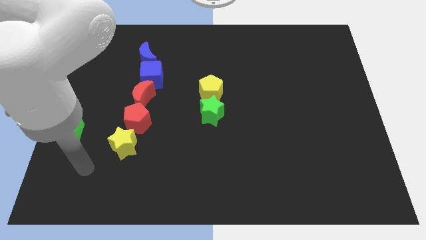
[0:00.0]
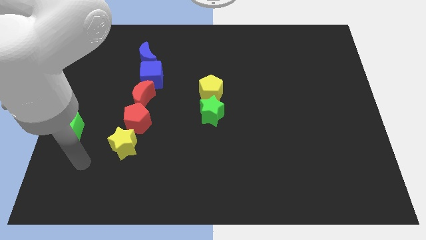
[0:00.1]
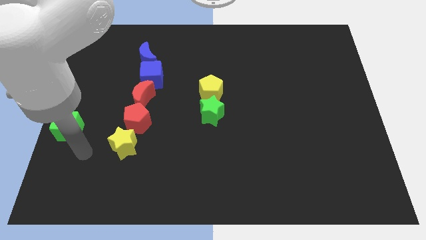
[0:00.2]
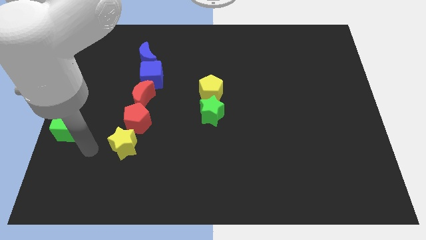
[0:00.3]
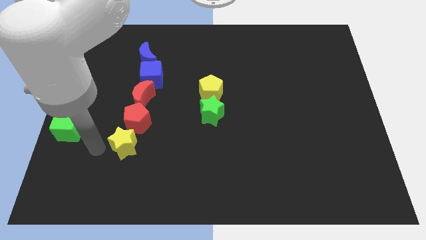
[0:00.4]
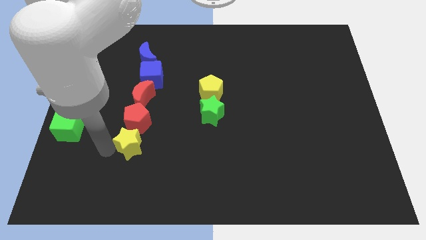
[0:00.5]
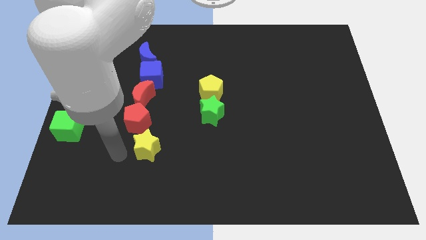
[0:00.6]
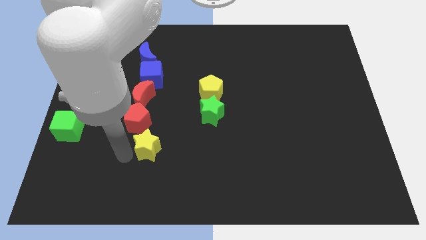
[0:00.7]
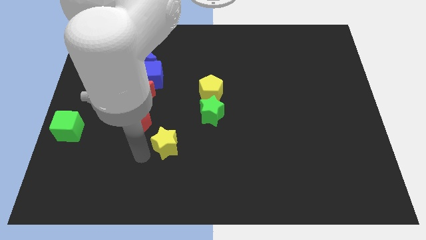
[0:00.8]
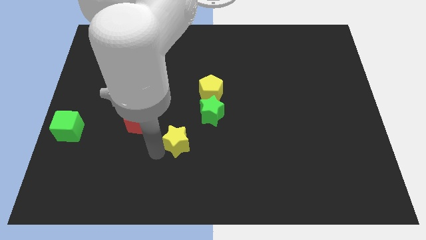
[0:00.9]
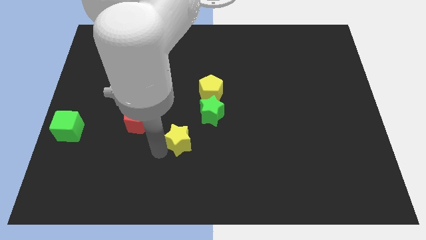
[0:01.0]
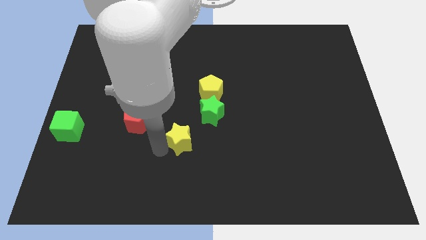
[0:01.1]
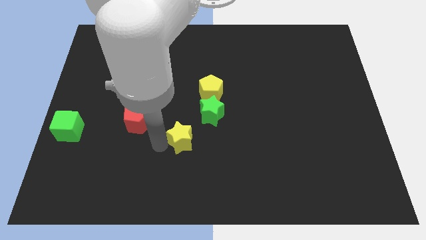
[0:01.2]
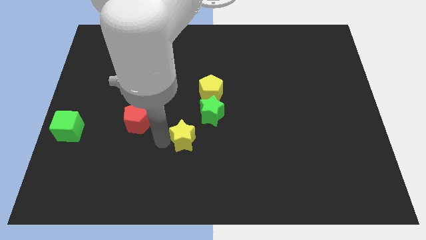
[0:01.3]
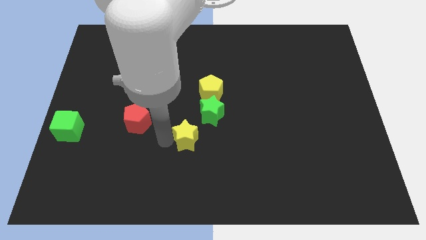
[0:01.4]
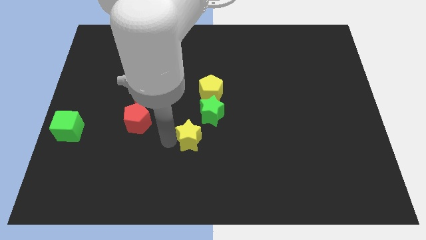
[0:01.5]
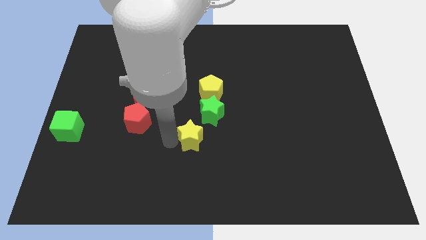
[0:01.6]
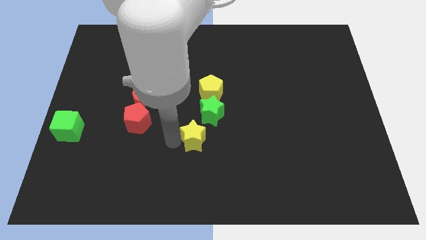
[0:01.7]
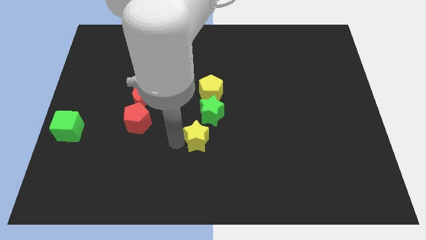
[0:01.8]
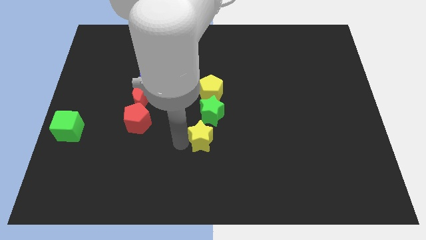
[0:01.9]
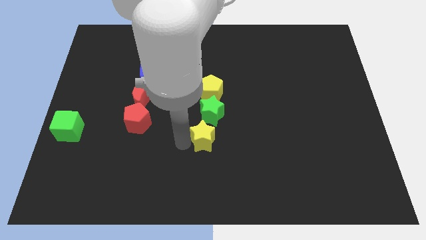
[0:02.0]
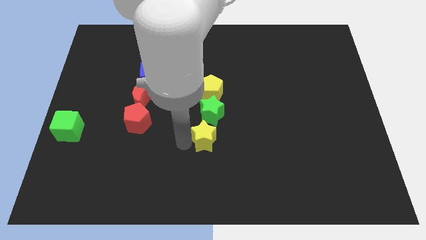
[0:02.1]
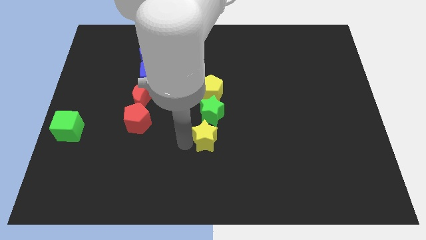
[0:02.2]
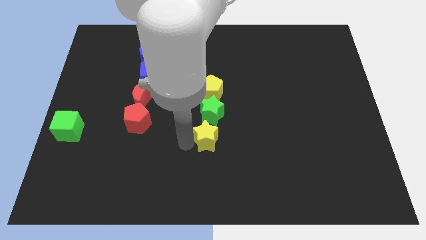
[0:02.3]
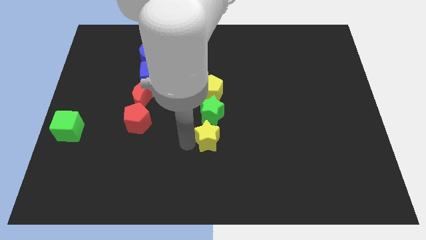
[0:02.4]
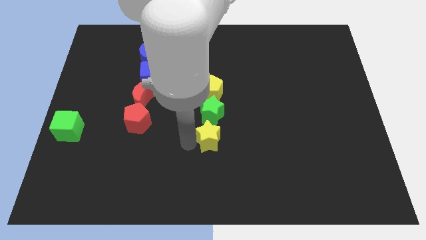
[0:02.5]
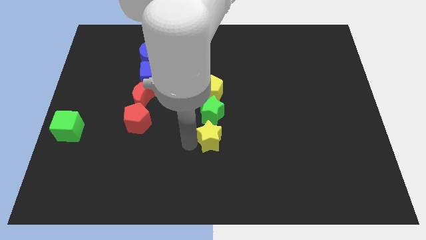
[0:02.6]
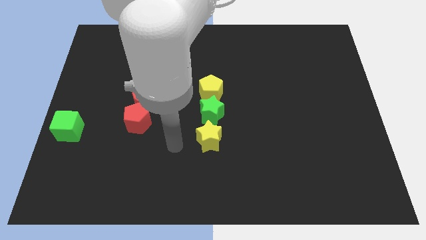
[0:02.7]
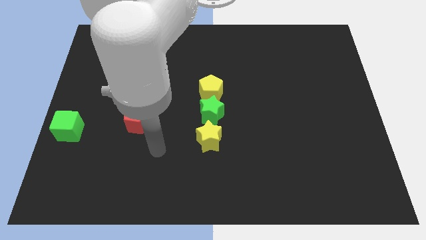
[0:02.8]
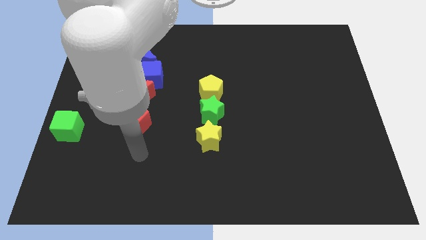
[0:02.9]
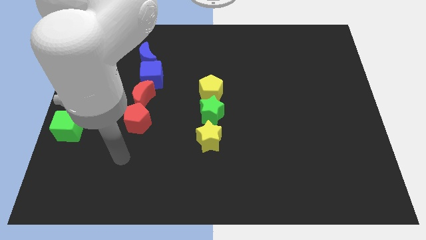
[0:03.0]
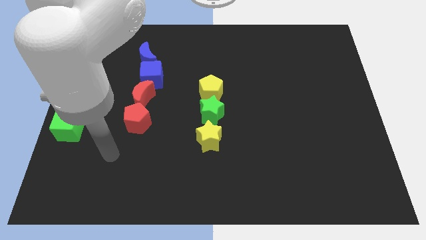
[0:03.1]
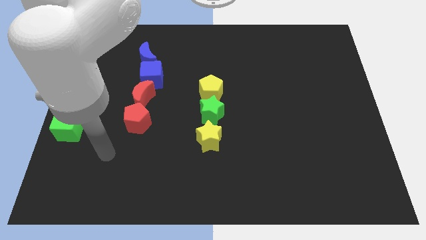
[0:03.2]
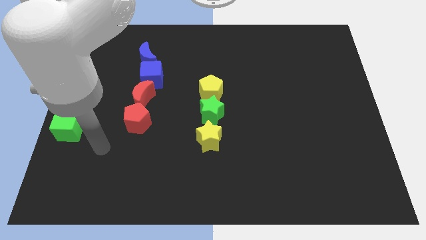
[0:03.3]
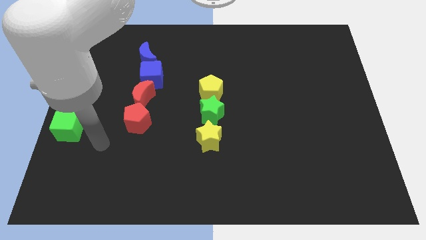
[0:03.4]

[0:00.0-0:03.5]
push the yellow star below the green star

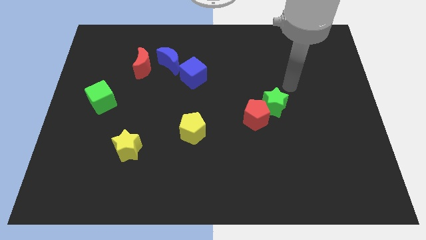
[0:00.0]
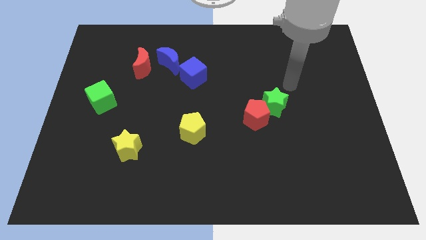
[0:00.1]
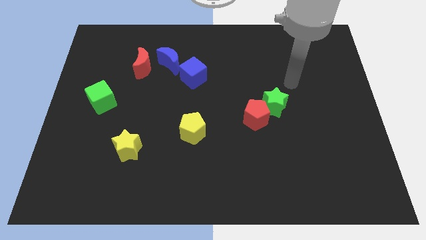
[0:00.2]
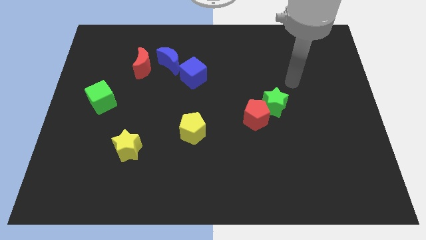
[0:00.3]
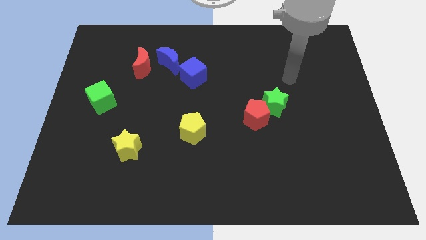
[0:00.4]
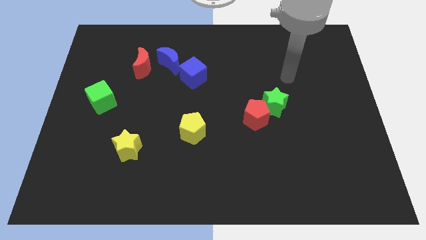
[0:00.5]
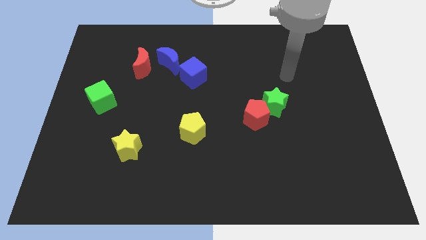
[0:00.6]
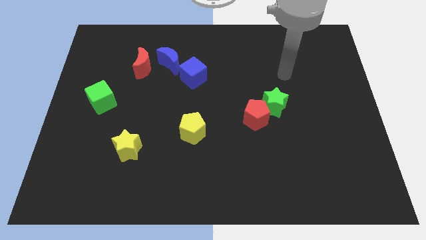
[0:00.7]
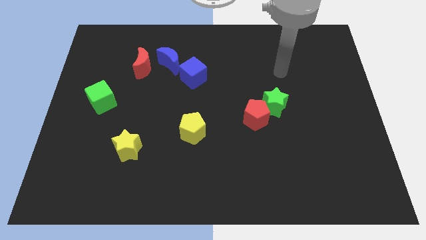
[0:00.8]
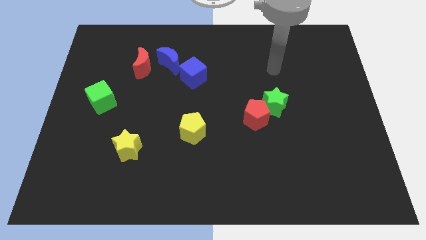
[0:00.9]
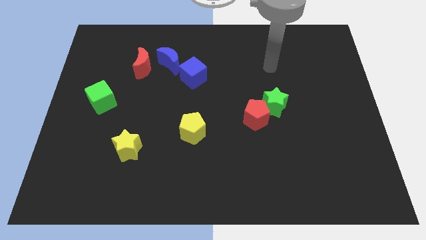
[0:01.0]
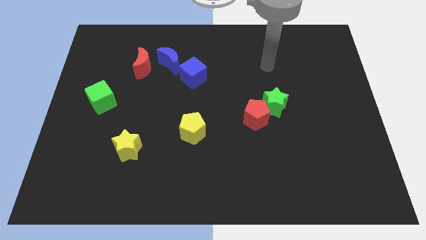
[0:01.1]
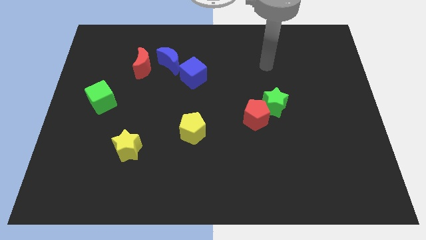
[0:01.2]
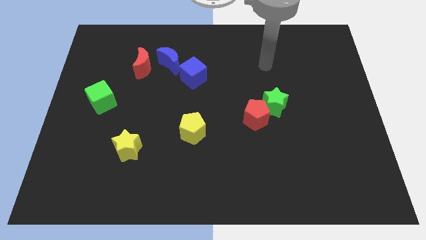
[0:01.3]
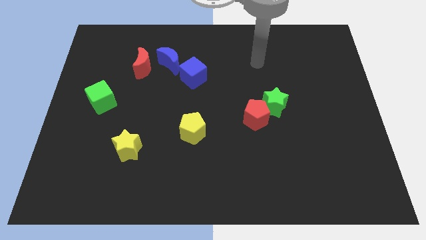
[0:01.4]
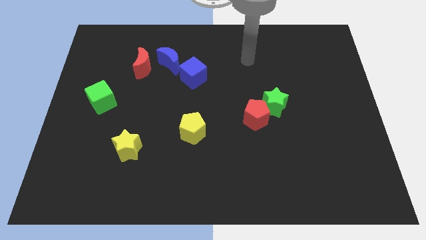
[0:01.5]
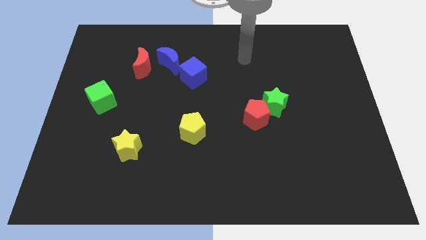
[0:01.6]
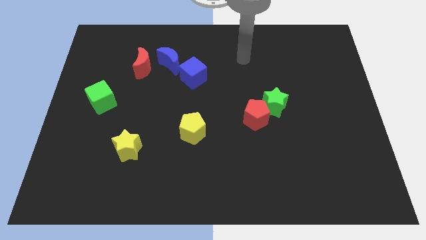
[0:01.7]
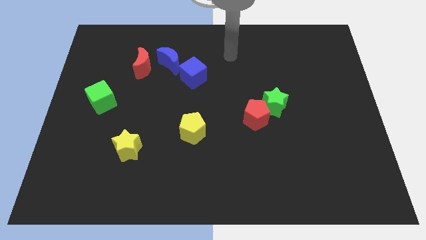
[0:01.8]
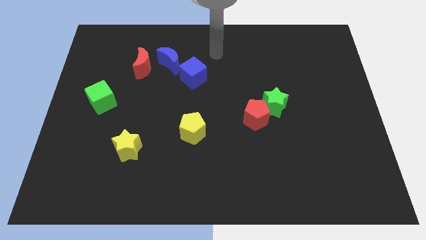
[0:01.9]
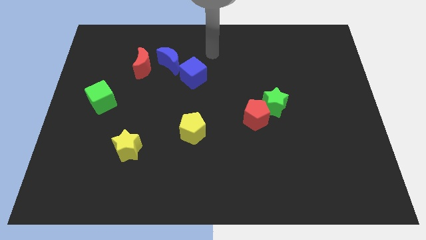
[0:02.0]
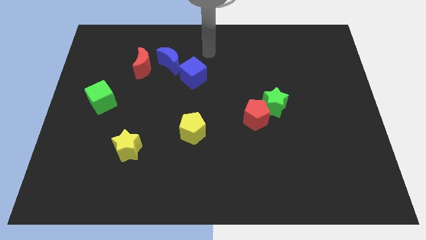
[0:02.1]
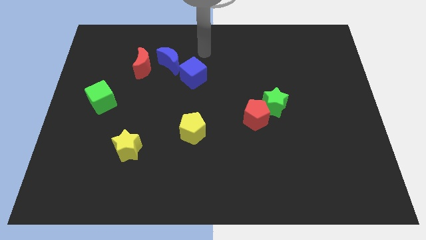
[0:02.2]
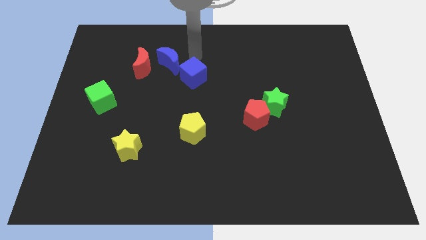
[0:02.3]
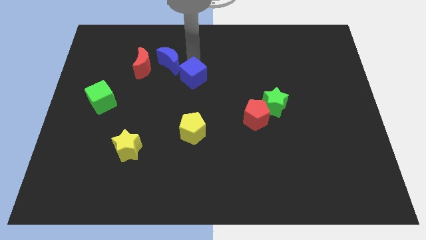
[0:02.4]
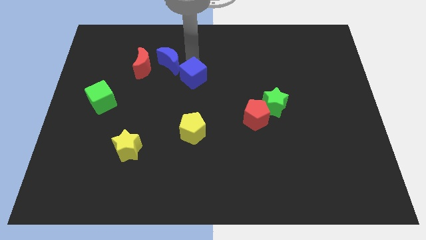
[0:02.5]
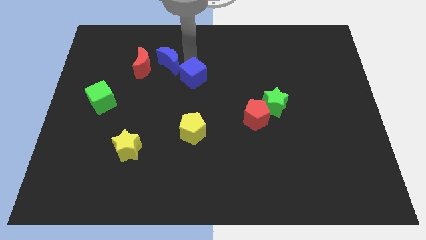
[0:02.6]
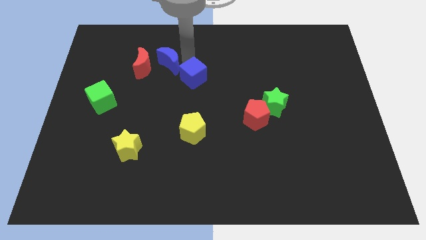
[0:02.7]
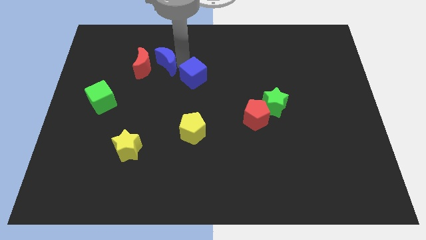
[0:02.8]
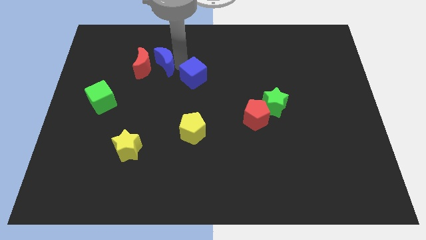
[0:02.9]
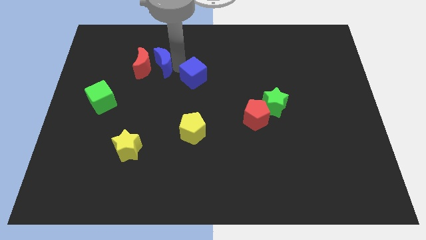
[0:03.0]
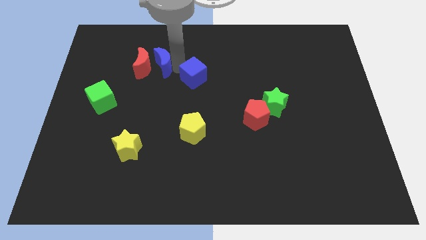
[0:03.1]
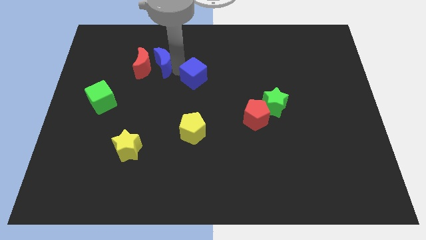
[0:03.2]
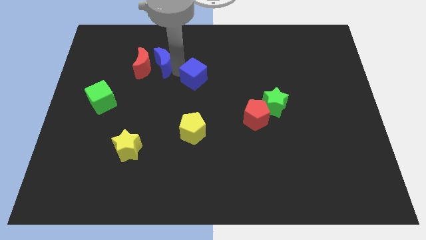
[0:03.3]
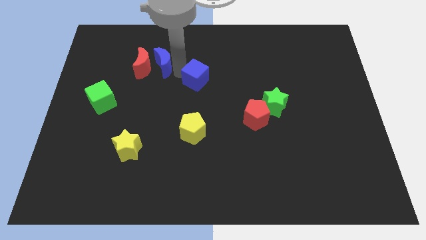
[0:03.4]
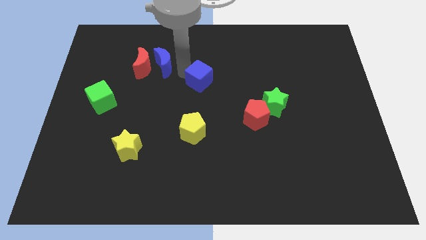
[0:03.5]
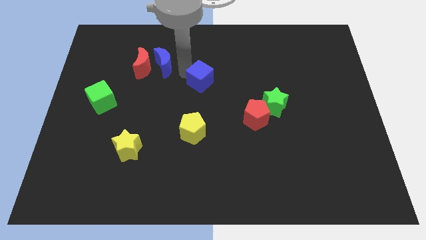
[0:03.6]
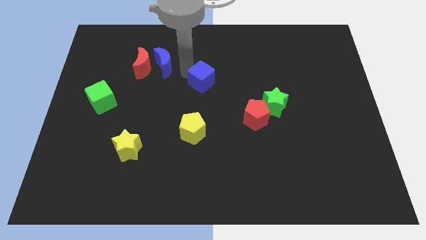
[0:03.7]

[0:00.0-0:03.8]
point your arm between blue moon and blue cube

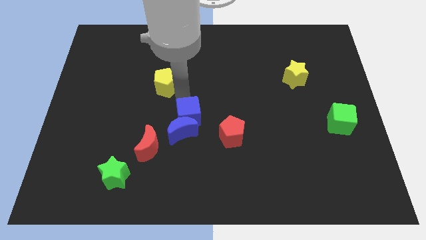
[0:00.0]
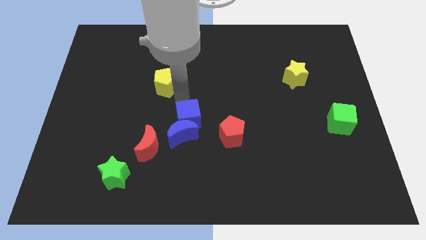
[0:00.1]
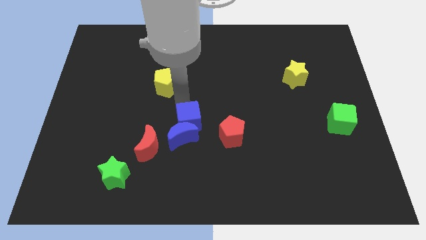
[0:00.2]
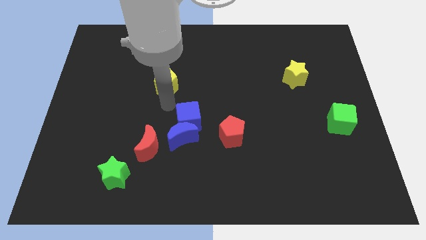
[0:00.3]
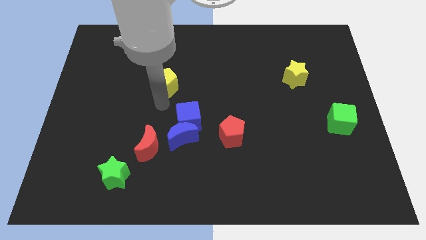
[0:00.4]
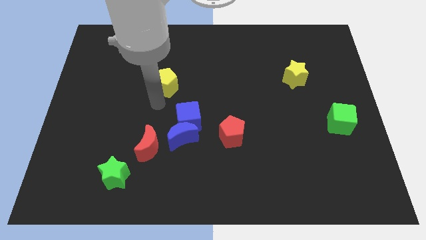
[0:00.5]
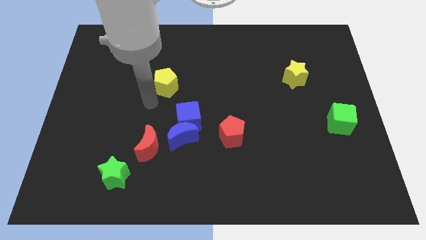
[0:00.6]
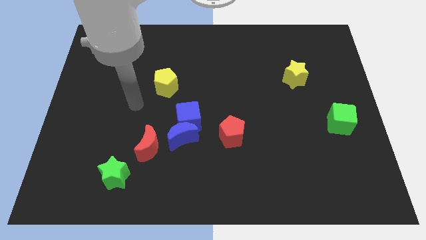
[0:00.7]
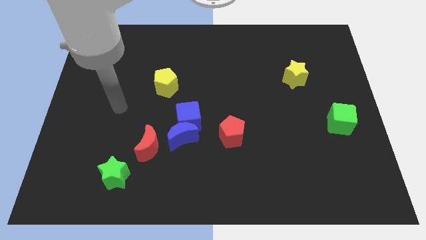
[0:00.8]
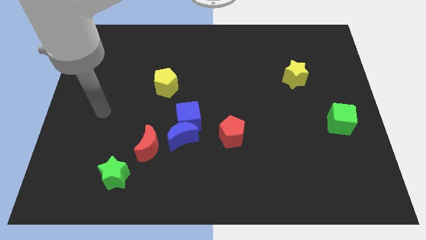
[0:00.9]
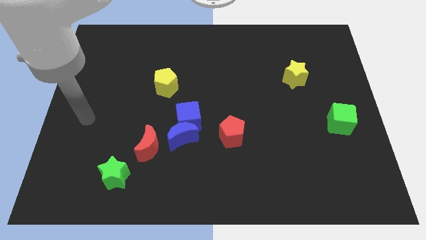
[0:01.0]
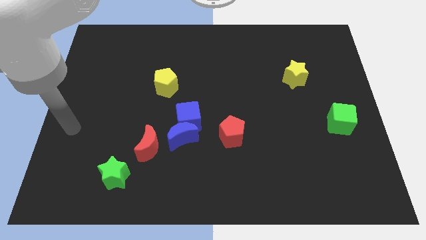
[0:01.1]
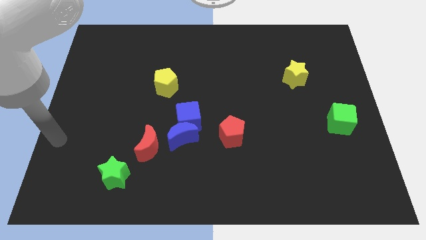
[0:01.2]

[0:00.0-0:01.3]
place blue moon between red moon and red pentagon

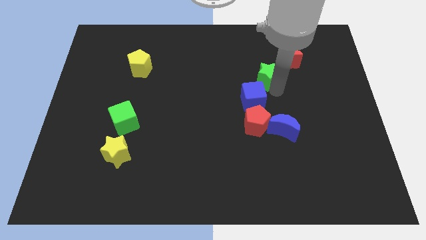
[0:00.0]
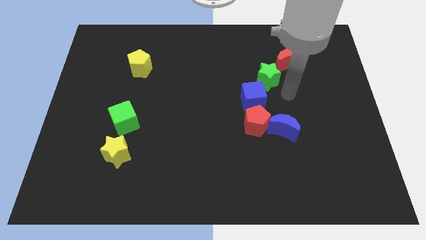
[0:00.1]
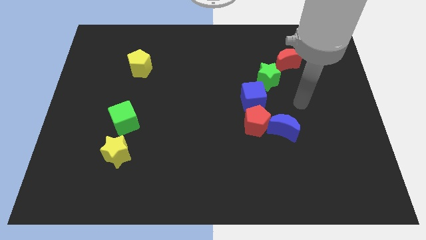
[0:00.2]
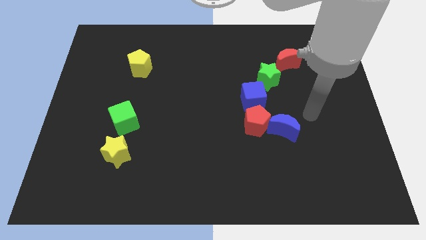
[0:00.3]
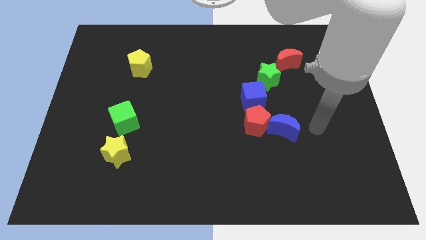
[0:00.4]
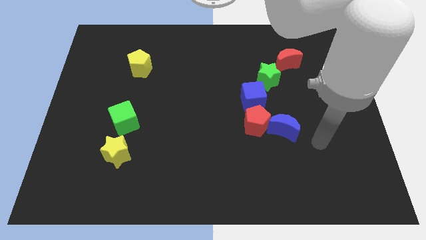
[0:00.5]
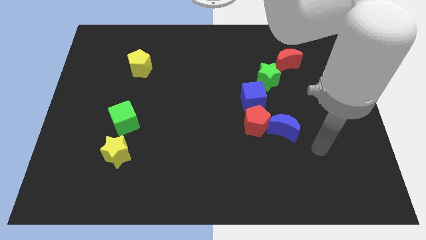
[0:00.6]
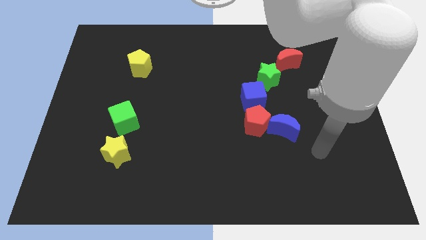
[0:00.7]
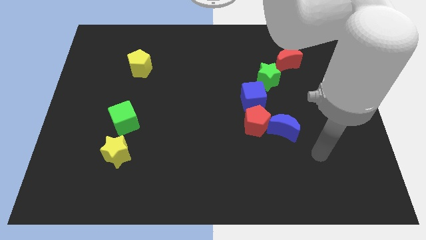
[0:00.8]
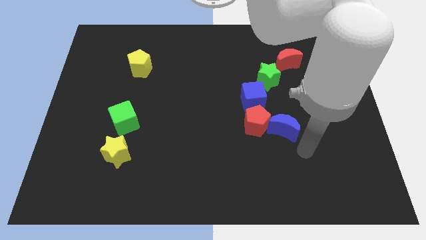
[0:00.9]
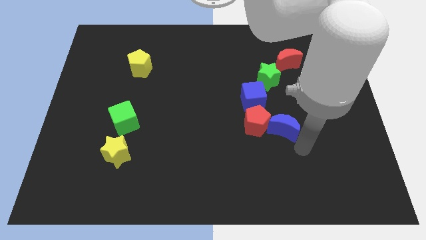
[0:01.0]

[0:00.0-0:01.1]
move your arm away from the green star
